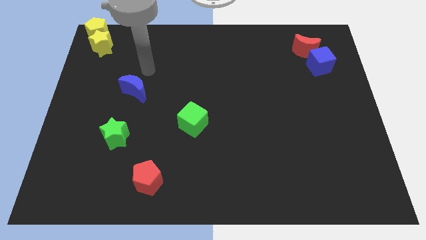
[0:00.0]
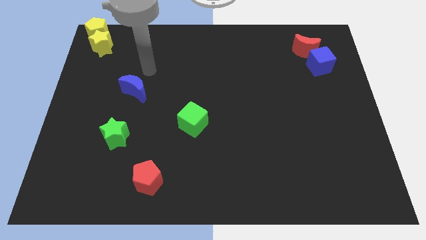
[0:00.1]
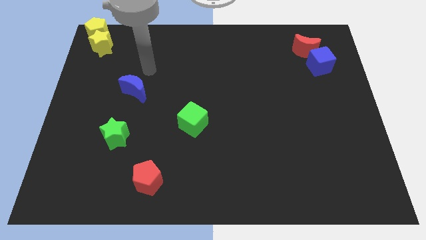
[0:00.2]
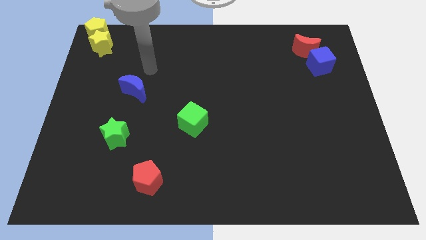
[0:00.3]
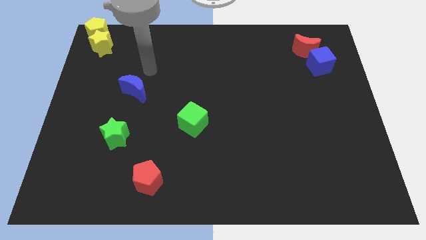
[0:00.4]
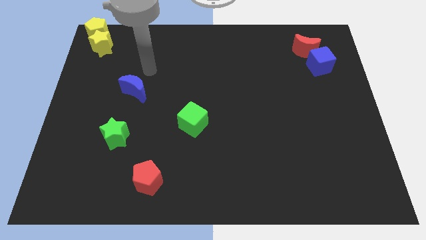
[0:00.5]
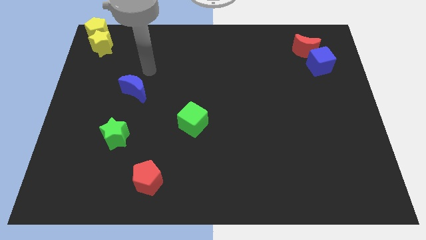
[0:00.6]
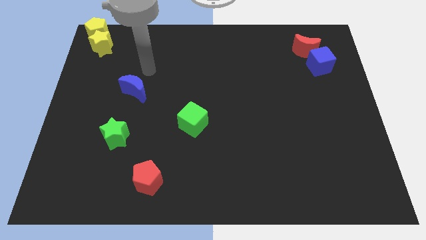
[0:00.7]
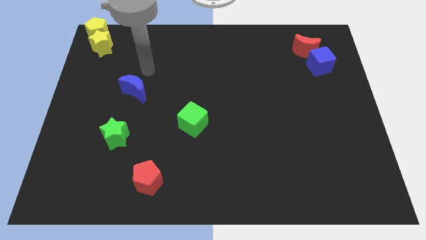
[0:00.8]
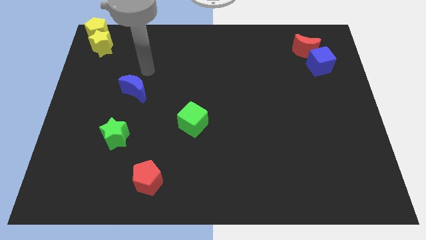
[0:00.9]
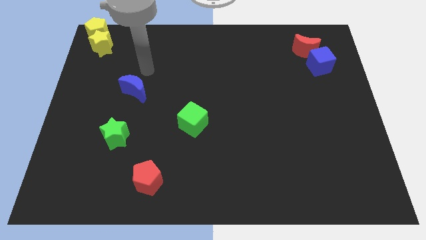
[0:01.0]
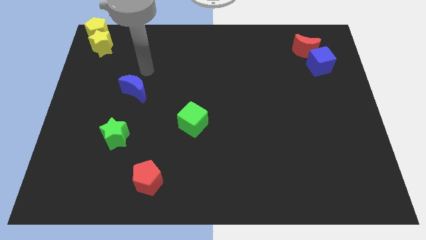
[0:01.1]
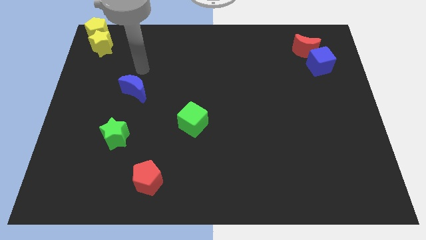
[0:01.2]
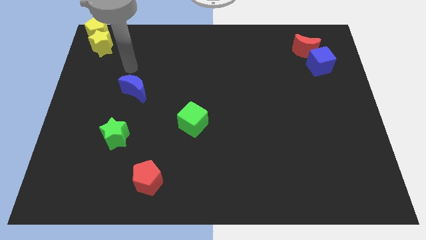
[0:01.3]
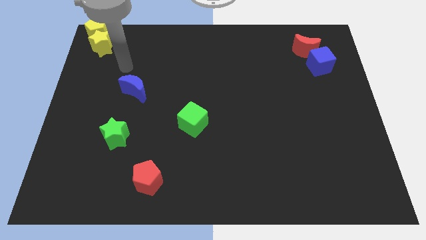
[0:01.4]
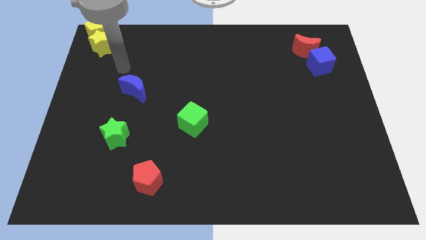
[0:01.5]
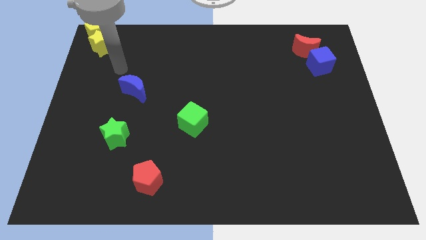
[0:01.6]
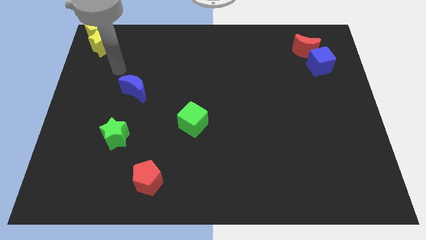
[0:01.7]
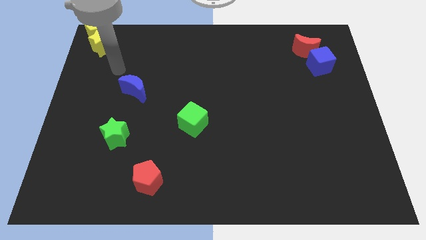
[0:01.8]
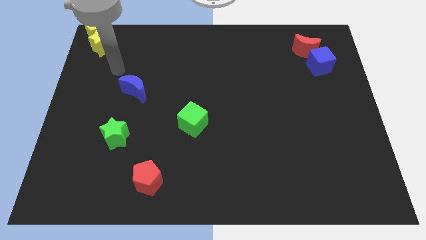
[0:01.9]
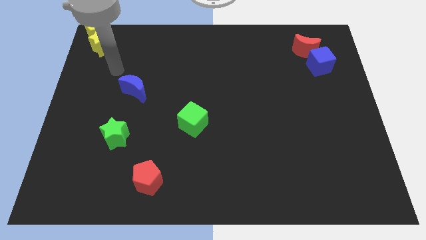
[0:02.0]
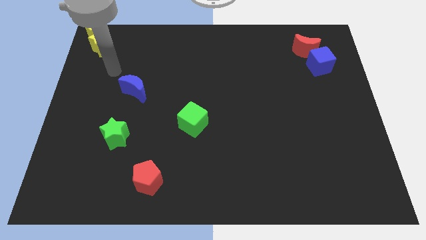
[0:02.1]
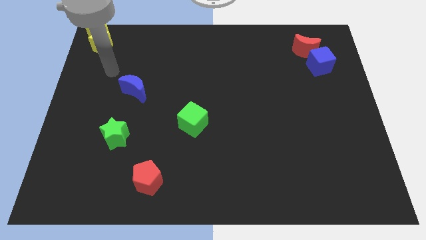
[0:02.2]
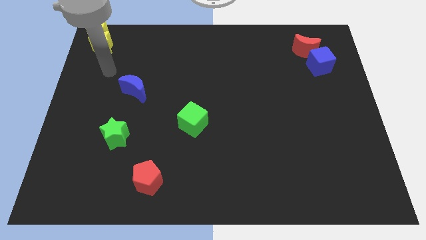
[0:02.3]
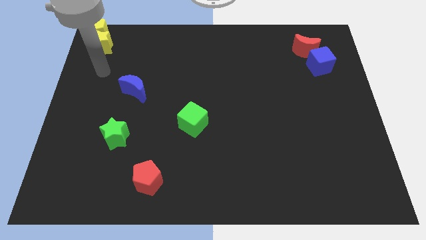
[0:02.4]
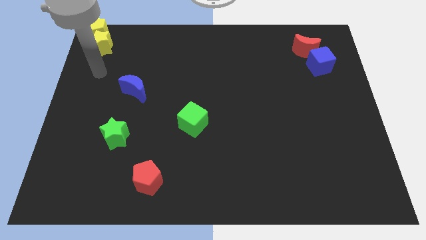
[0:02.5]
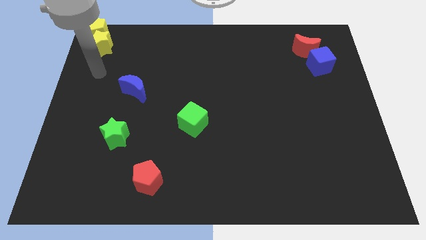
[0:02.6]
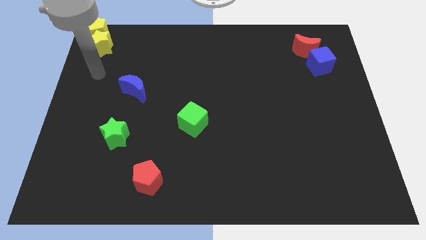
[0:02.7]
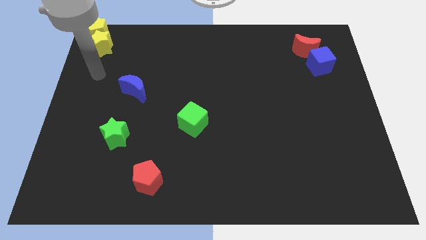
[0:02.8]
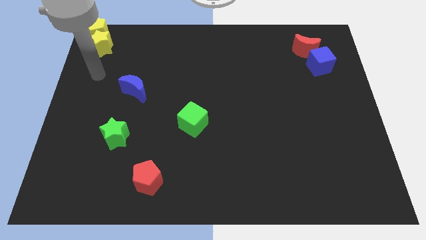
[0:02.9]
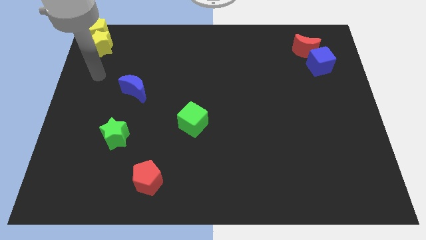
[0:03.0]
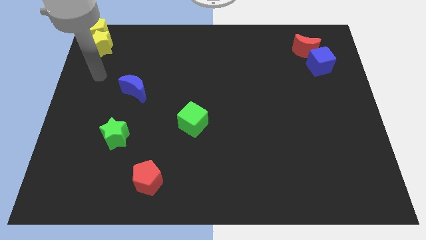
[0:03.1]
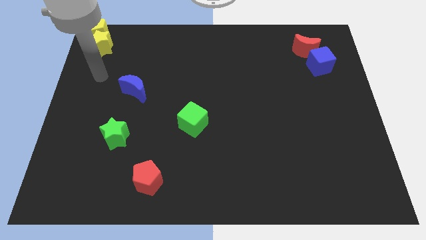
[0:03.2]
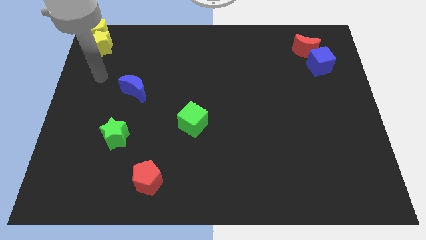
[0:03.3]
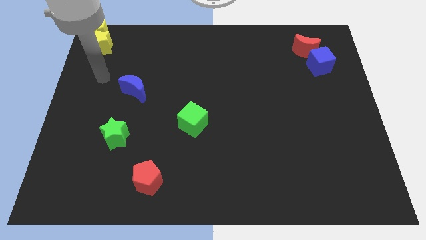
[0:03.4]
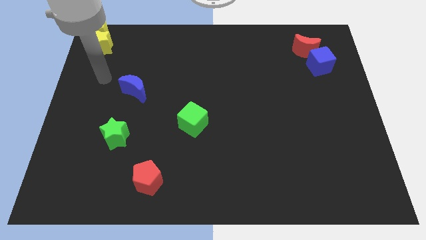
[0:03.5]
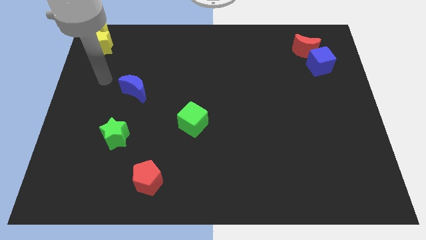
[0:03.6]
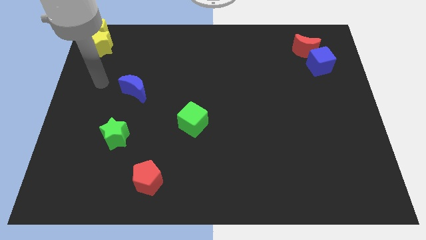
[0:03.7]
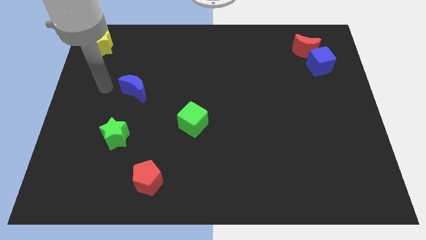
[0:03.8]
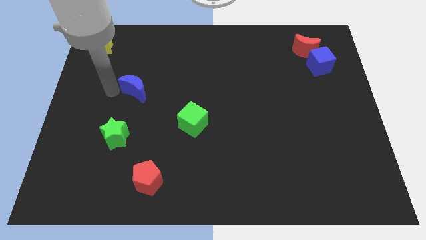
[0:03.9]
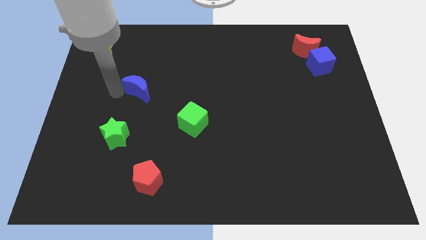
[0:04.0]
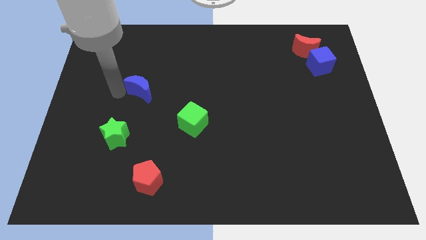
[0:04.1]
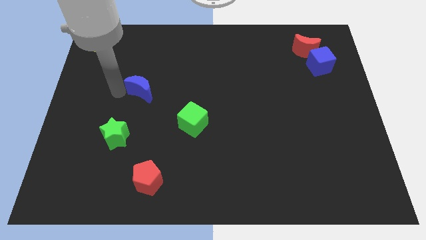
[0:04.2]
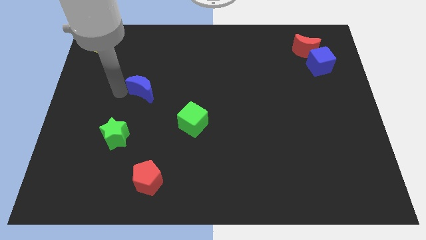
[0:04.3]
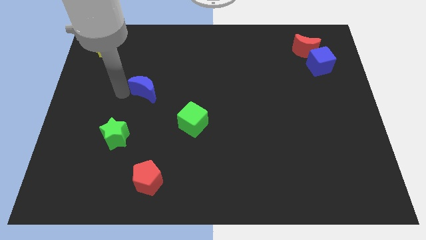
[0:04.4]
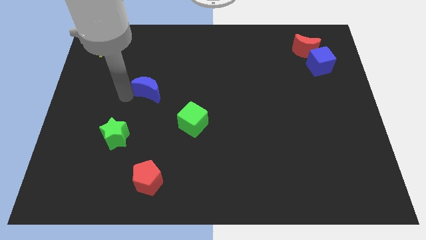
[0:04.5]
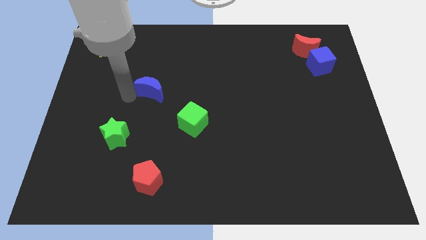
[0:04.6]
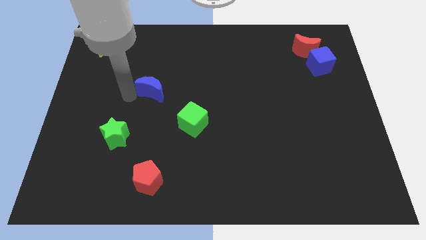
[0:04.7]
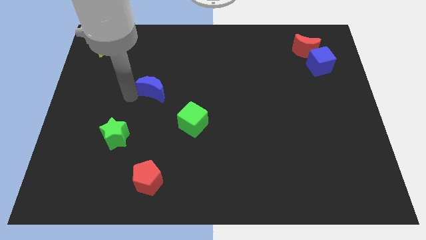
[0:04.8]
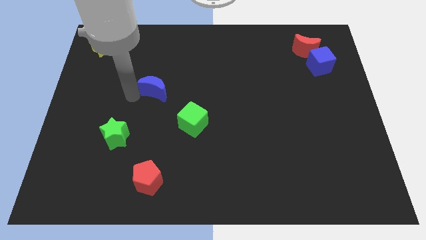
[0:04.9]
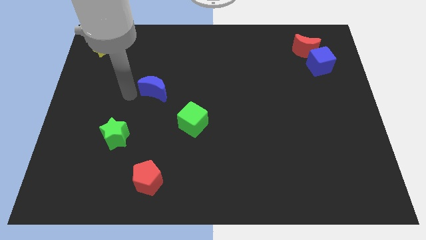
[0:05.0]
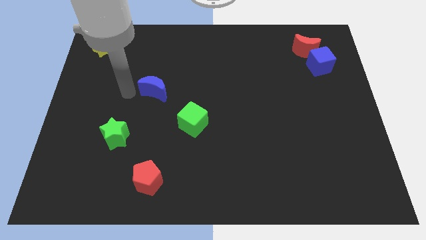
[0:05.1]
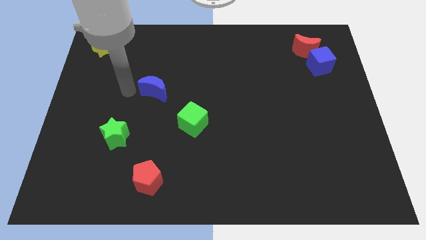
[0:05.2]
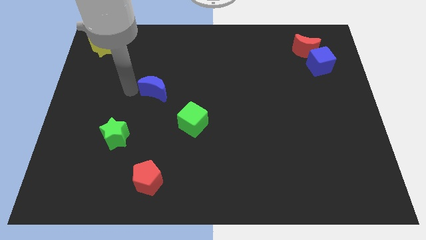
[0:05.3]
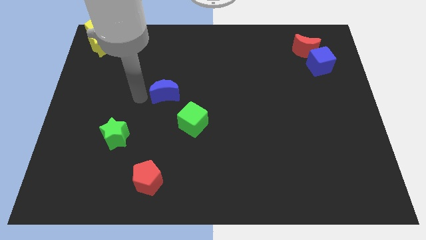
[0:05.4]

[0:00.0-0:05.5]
move blue moon slightly right

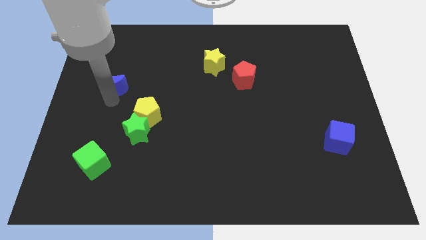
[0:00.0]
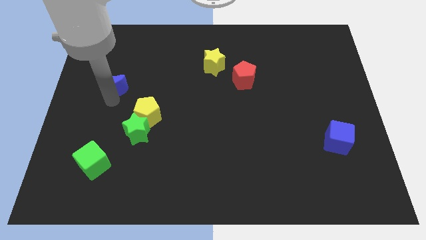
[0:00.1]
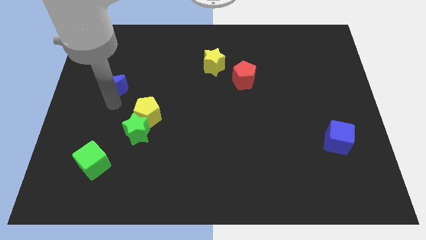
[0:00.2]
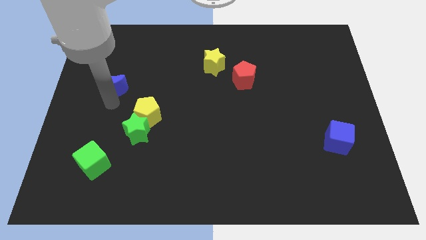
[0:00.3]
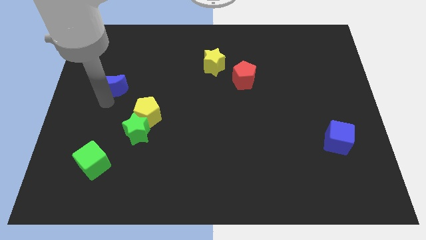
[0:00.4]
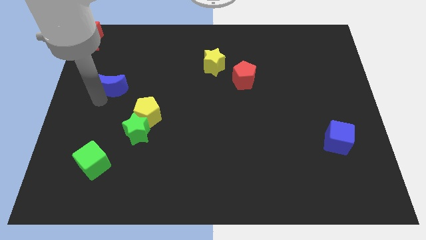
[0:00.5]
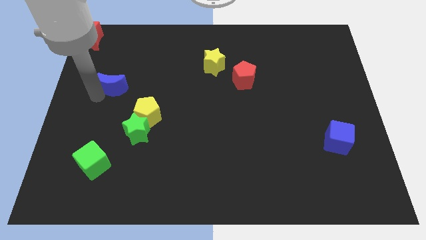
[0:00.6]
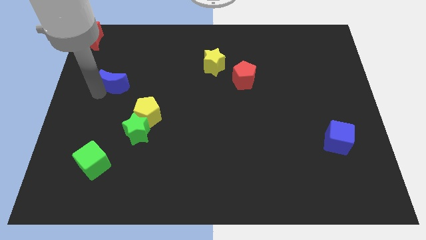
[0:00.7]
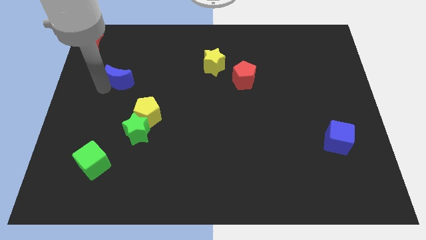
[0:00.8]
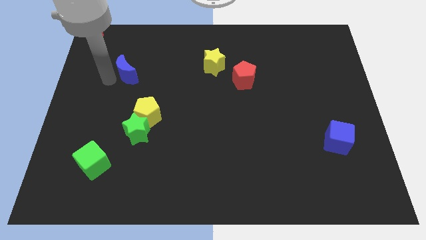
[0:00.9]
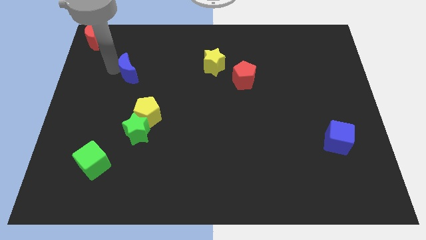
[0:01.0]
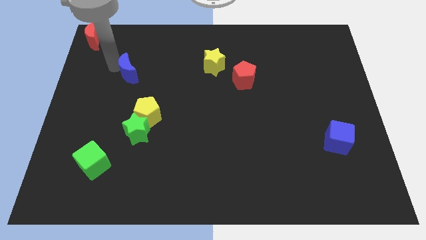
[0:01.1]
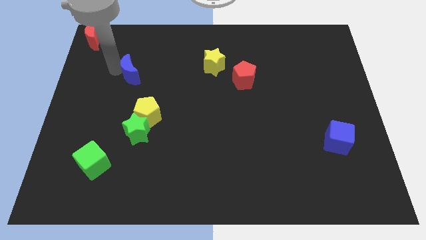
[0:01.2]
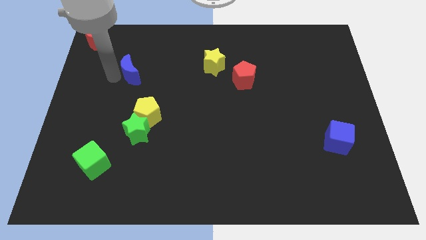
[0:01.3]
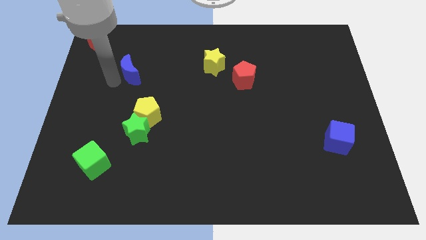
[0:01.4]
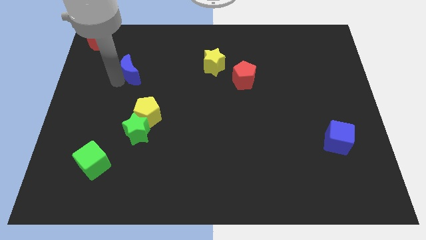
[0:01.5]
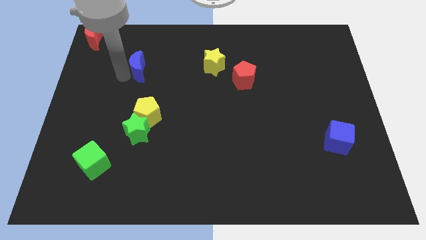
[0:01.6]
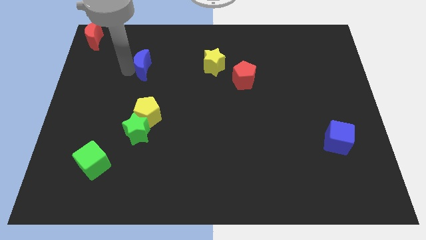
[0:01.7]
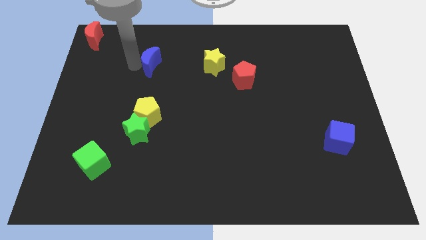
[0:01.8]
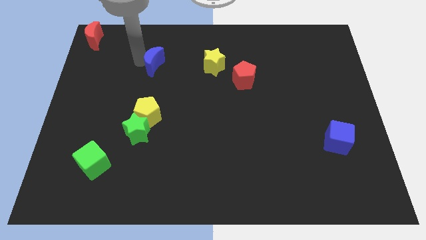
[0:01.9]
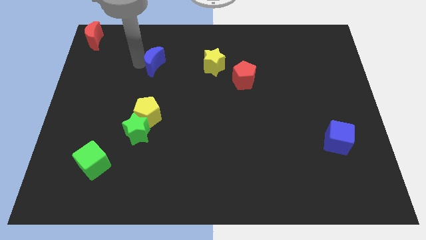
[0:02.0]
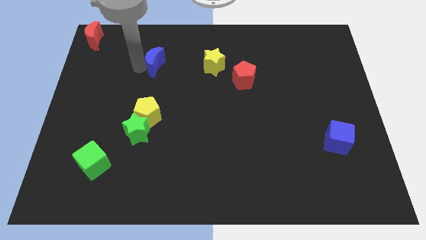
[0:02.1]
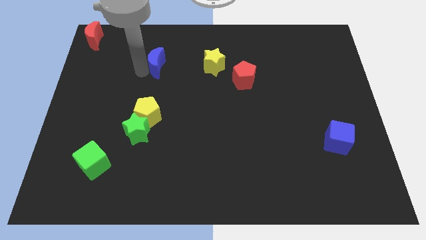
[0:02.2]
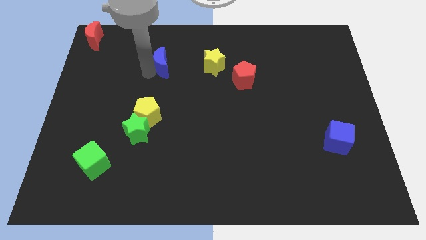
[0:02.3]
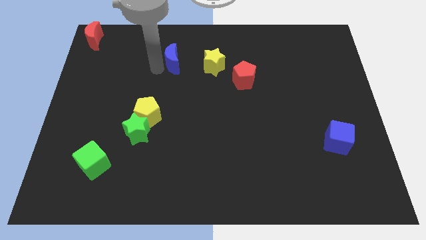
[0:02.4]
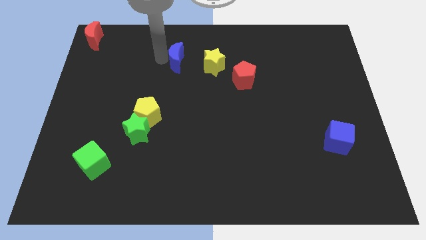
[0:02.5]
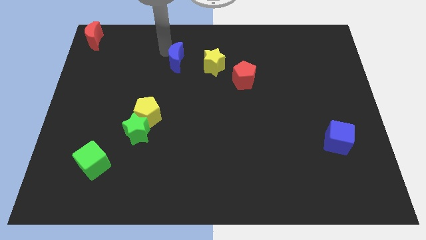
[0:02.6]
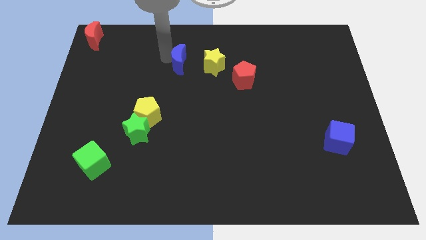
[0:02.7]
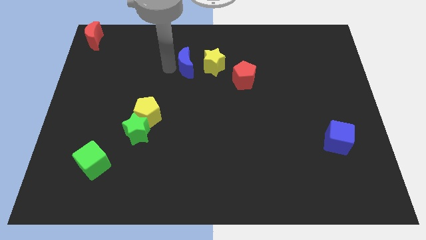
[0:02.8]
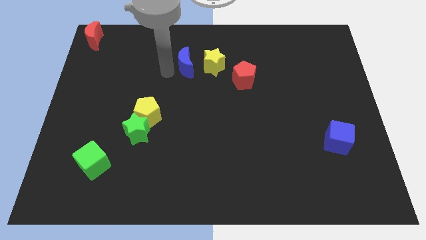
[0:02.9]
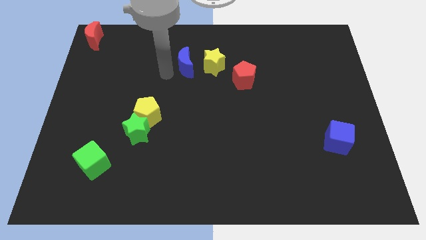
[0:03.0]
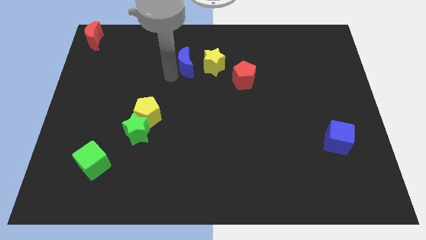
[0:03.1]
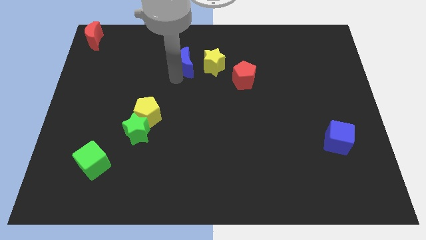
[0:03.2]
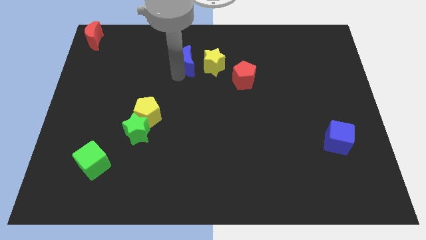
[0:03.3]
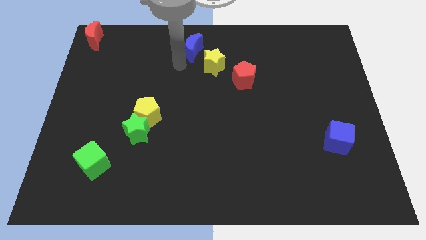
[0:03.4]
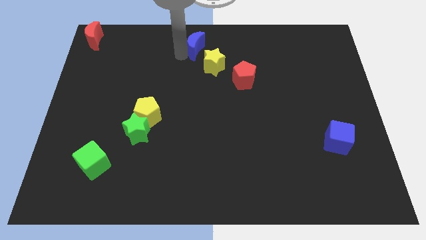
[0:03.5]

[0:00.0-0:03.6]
move the blue moon close to the yellow star
